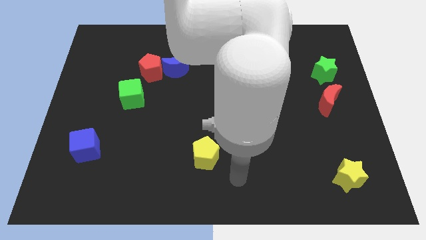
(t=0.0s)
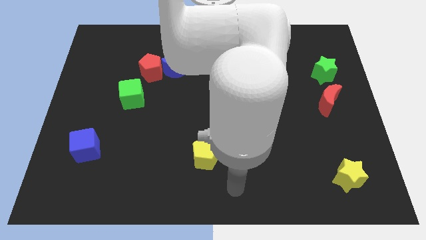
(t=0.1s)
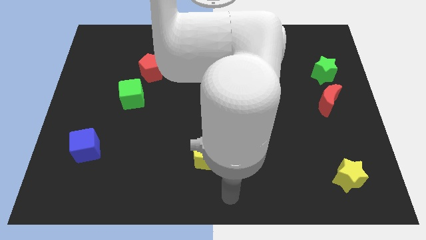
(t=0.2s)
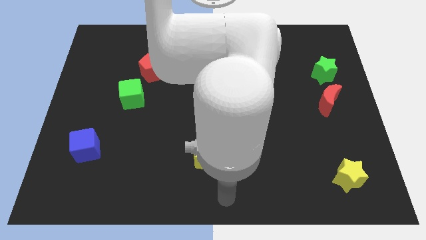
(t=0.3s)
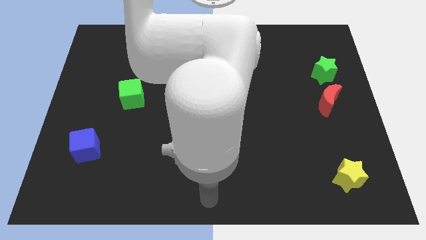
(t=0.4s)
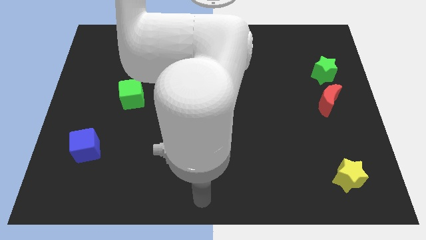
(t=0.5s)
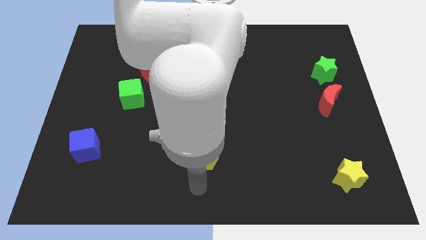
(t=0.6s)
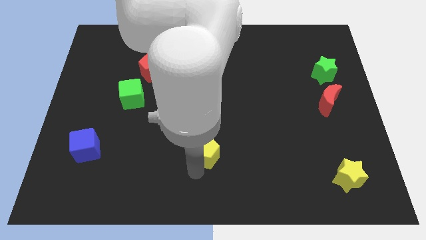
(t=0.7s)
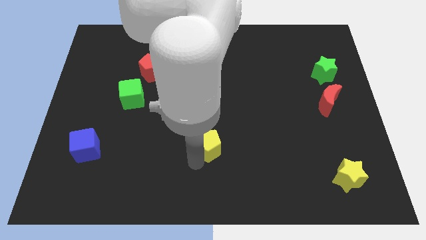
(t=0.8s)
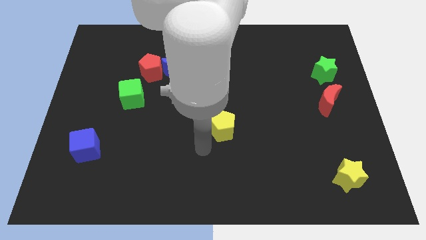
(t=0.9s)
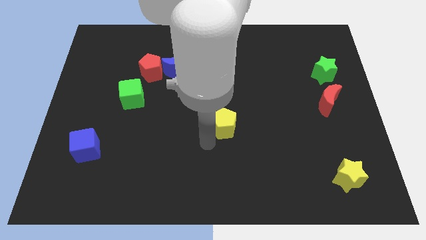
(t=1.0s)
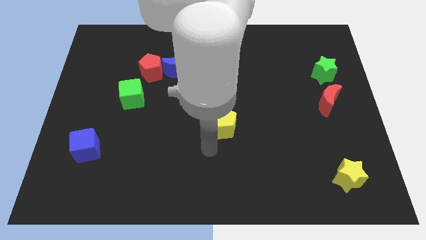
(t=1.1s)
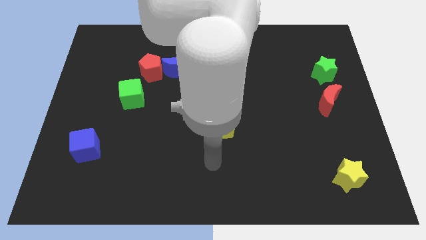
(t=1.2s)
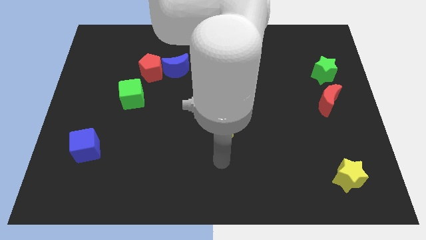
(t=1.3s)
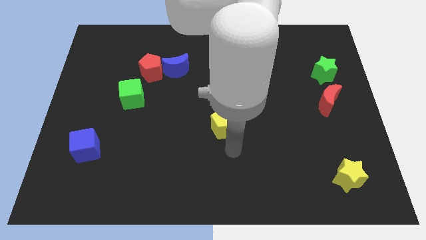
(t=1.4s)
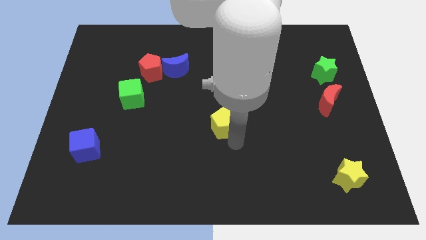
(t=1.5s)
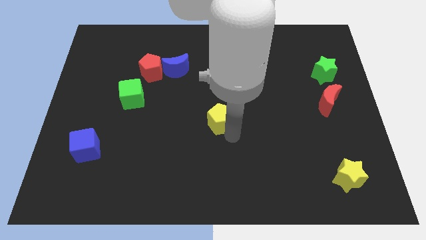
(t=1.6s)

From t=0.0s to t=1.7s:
move the yellow pentagon diagonally on the top right side of the blue cube

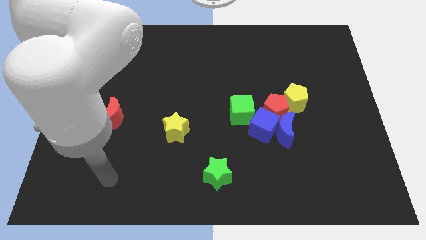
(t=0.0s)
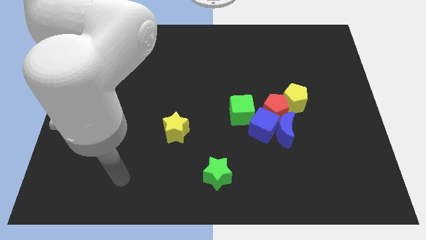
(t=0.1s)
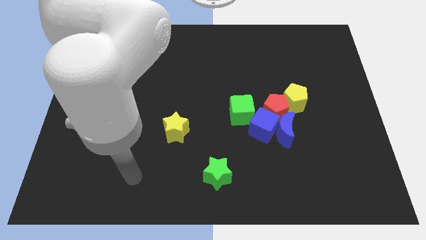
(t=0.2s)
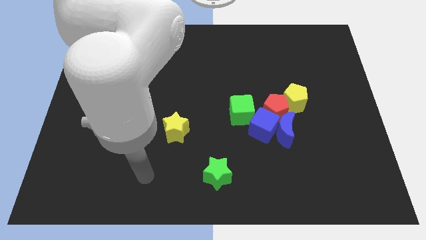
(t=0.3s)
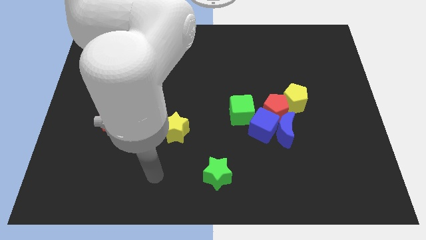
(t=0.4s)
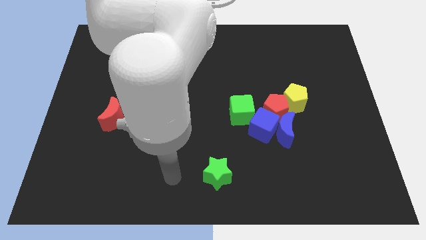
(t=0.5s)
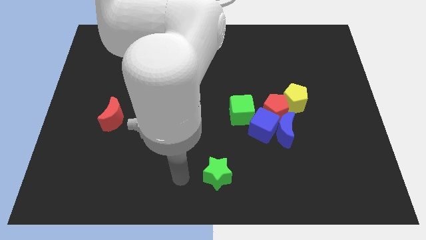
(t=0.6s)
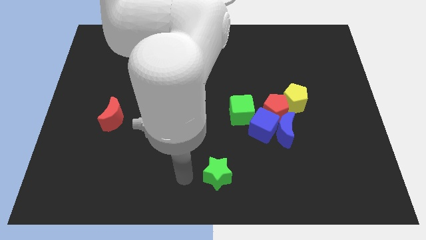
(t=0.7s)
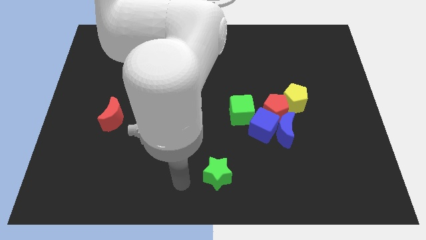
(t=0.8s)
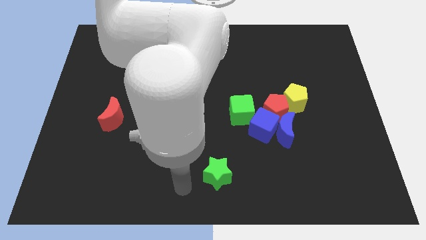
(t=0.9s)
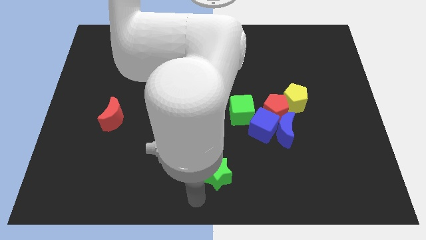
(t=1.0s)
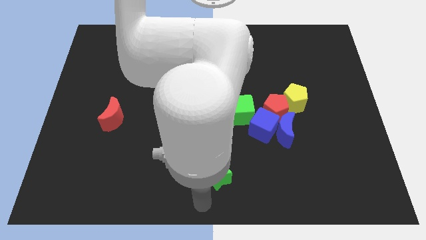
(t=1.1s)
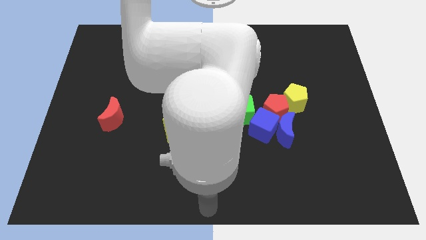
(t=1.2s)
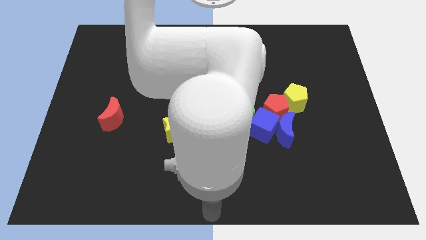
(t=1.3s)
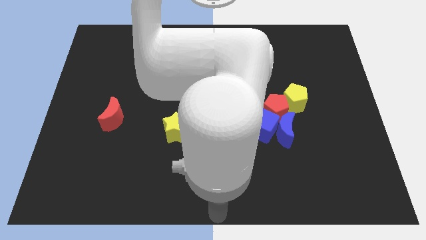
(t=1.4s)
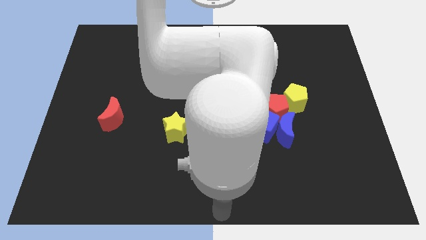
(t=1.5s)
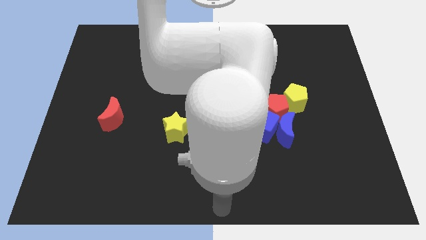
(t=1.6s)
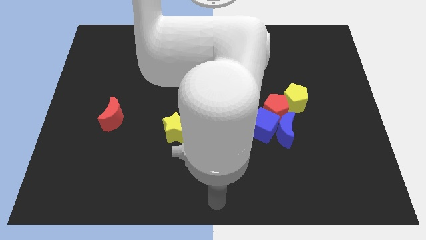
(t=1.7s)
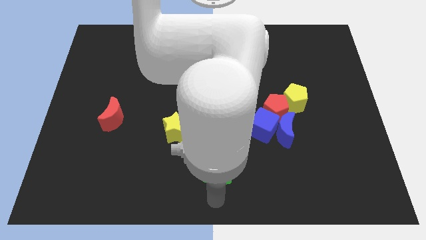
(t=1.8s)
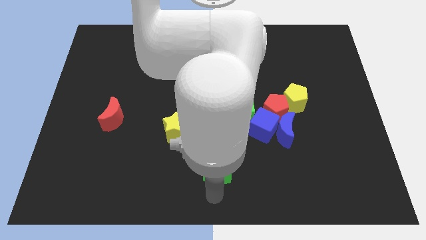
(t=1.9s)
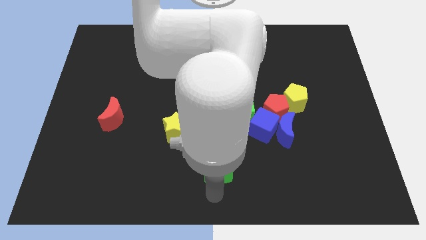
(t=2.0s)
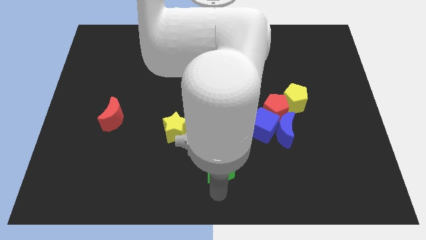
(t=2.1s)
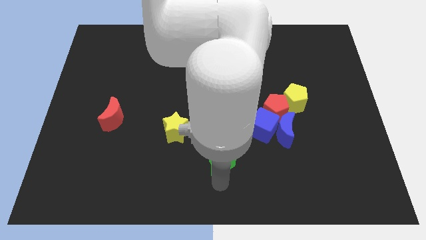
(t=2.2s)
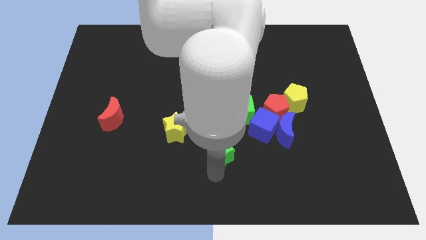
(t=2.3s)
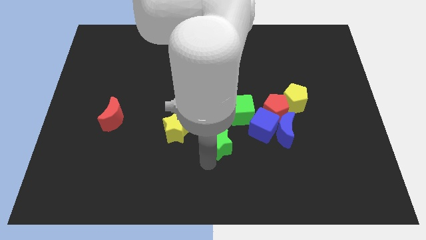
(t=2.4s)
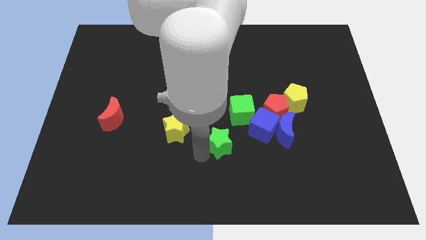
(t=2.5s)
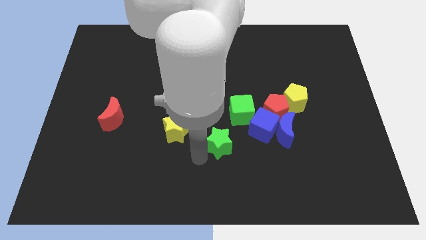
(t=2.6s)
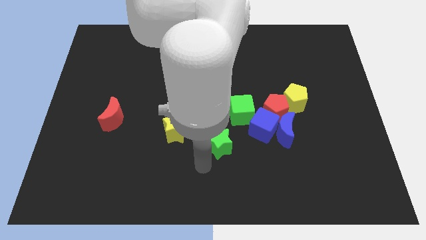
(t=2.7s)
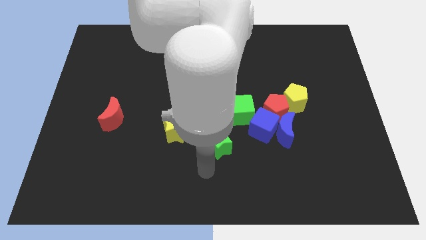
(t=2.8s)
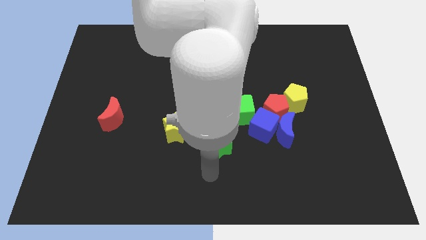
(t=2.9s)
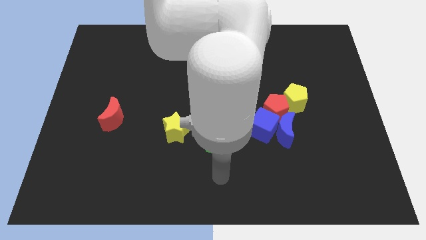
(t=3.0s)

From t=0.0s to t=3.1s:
move green star to the bottom right of yellow star

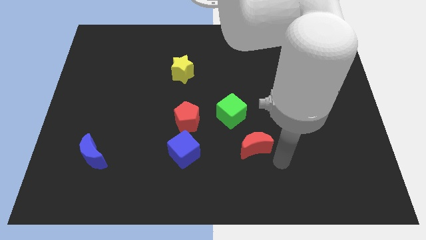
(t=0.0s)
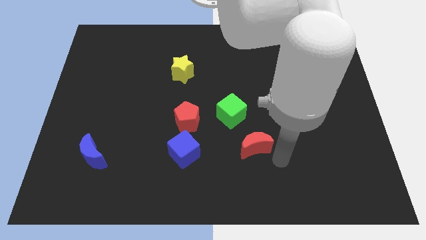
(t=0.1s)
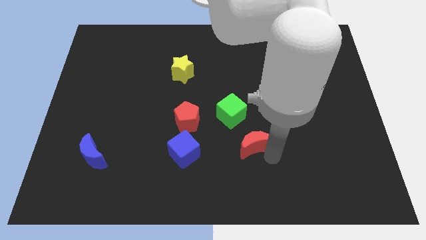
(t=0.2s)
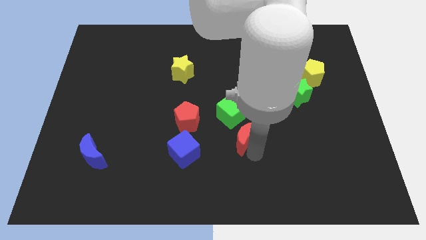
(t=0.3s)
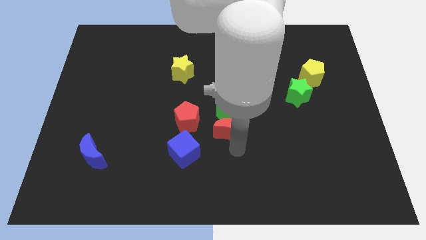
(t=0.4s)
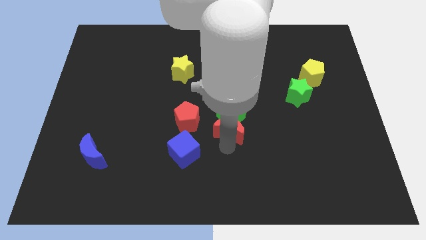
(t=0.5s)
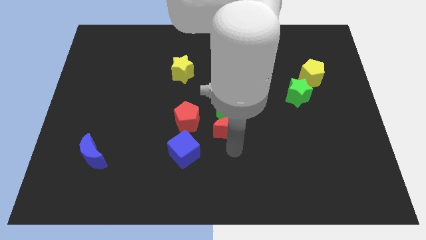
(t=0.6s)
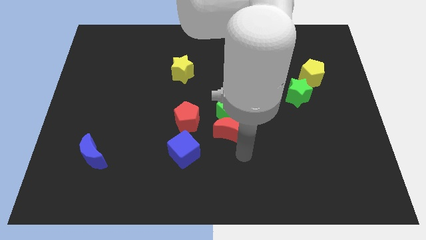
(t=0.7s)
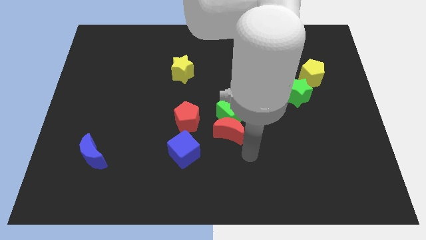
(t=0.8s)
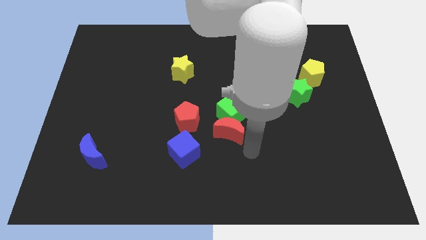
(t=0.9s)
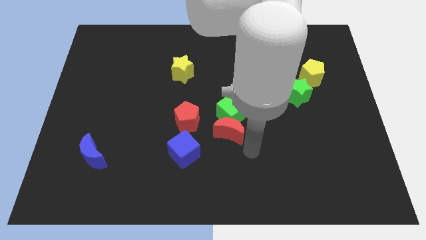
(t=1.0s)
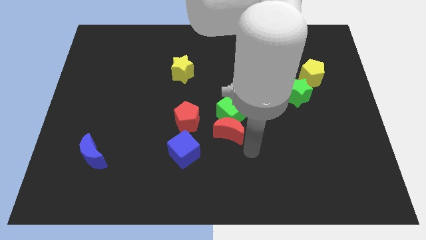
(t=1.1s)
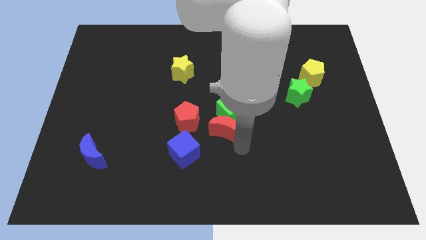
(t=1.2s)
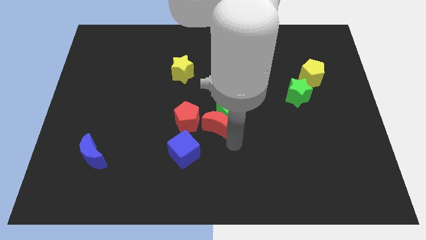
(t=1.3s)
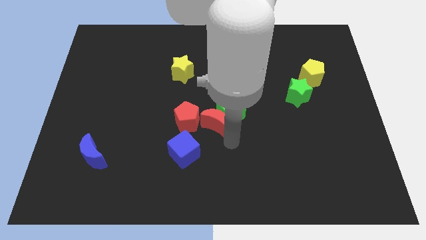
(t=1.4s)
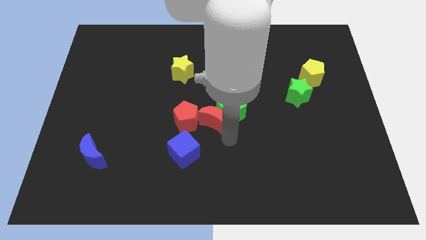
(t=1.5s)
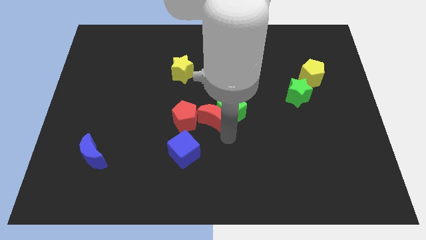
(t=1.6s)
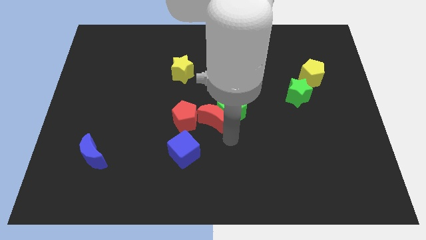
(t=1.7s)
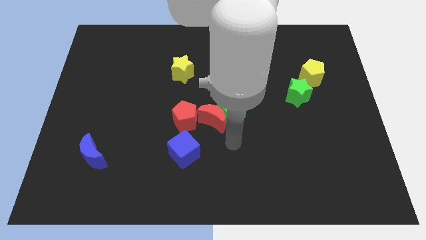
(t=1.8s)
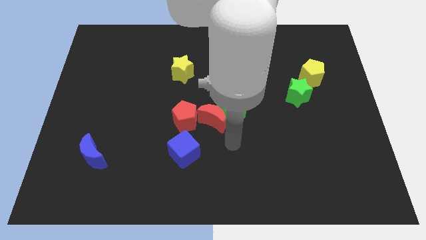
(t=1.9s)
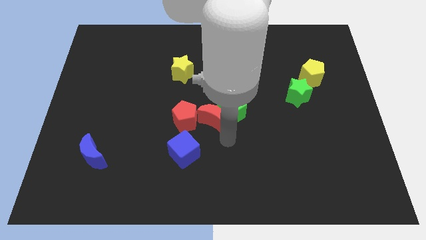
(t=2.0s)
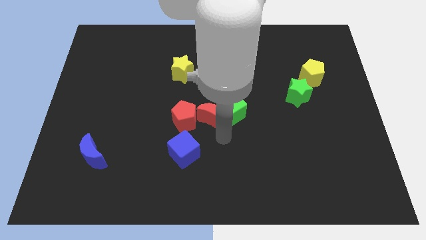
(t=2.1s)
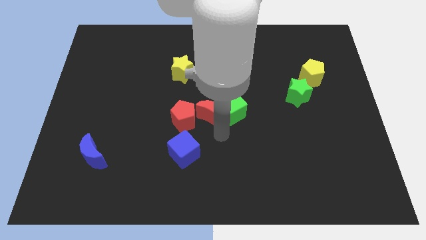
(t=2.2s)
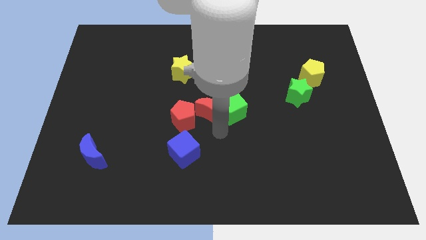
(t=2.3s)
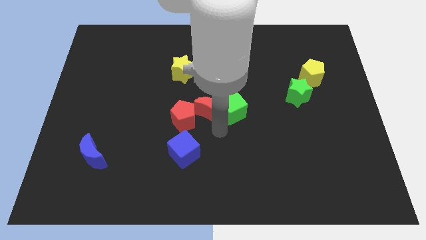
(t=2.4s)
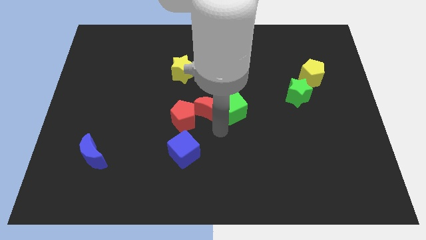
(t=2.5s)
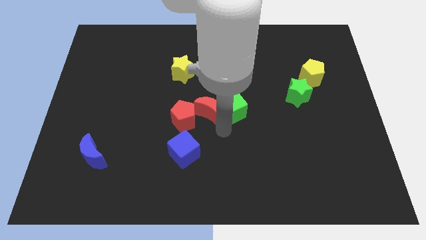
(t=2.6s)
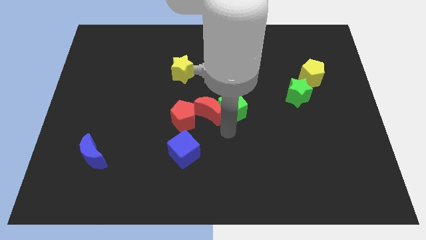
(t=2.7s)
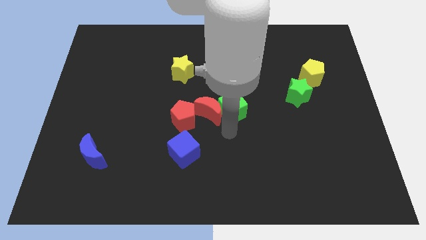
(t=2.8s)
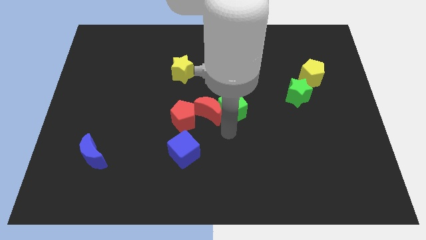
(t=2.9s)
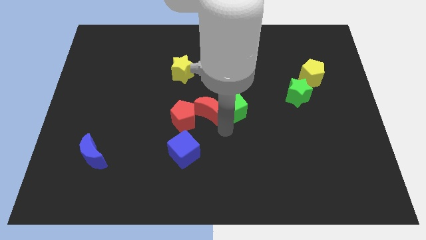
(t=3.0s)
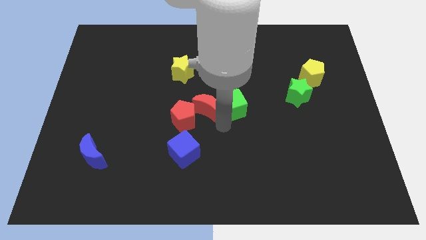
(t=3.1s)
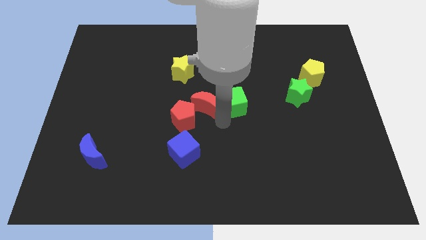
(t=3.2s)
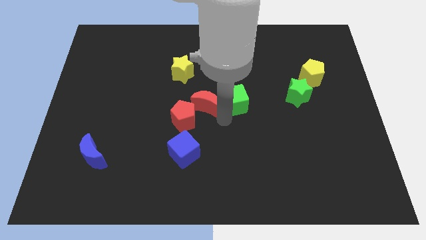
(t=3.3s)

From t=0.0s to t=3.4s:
place red crescent in between the green cube and red pentagon

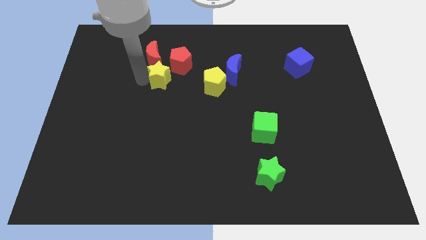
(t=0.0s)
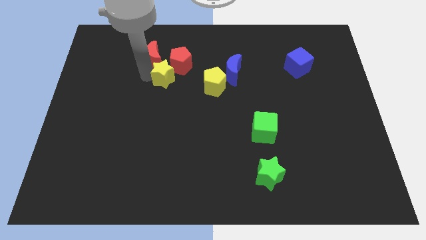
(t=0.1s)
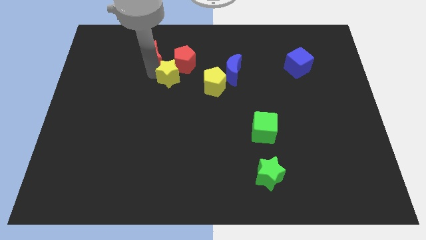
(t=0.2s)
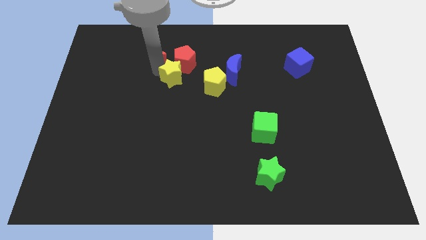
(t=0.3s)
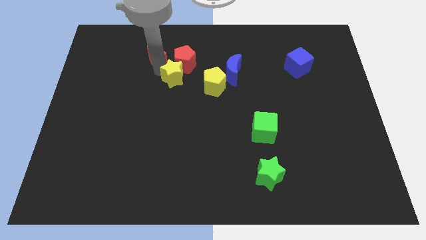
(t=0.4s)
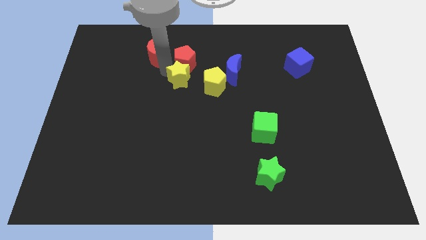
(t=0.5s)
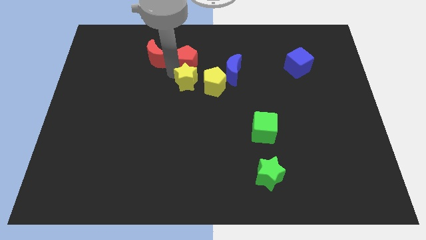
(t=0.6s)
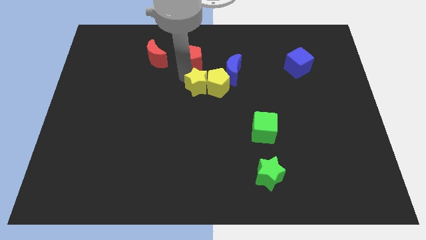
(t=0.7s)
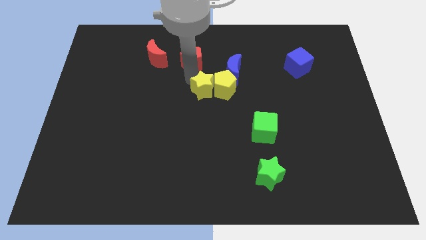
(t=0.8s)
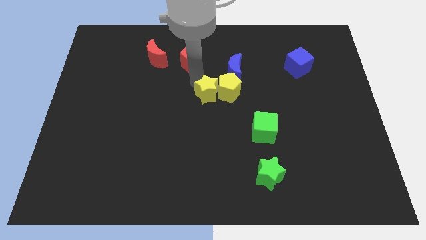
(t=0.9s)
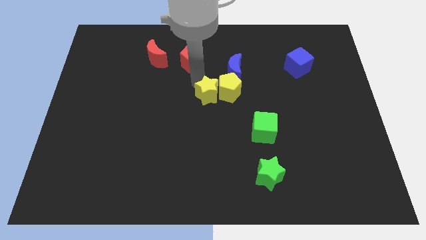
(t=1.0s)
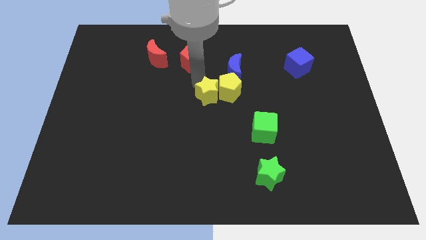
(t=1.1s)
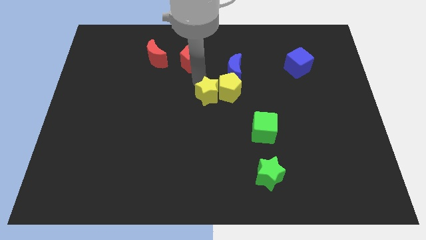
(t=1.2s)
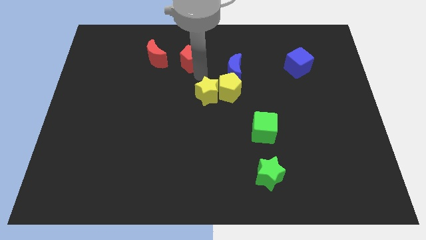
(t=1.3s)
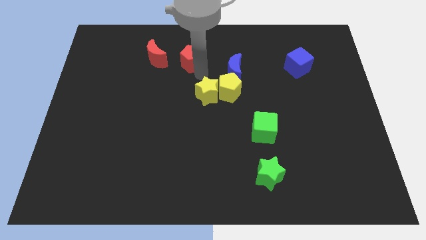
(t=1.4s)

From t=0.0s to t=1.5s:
push yellow star into the yellow pentagon
